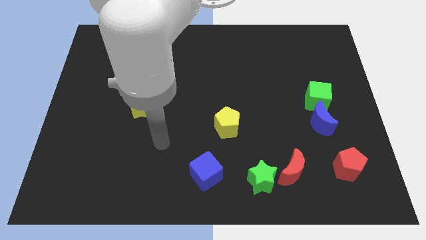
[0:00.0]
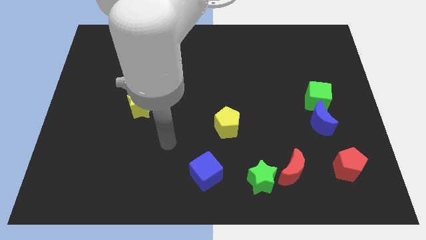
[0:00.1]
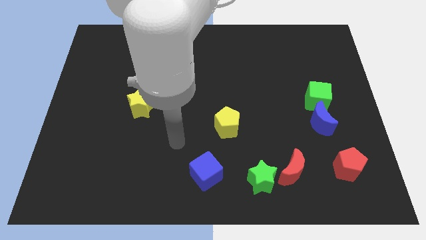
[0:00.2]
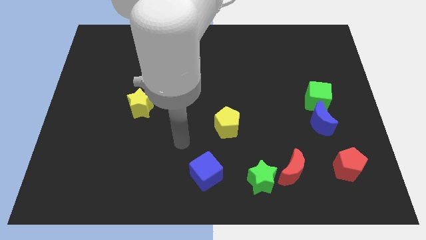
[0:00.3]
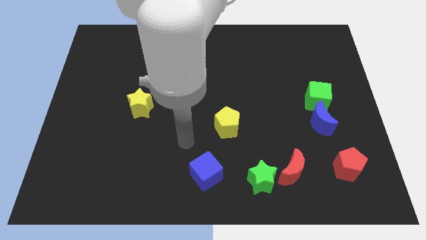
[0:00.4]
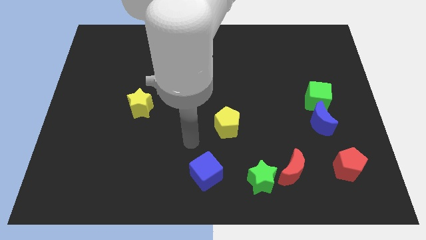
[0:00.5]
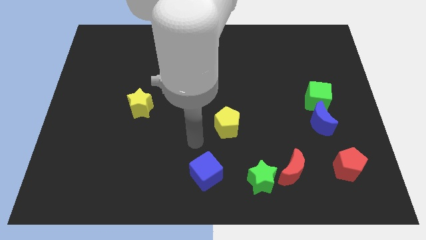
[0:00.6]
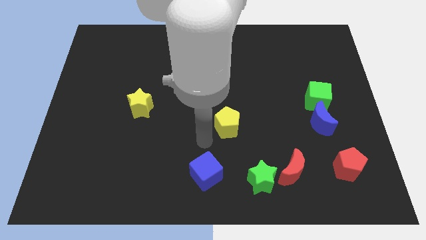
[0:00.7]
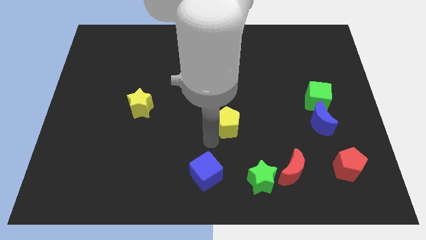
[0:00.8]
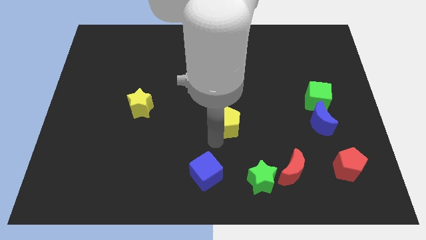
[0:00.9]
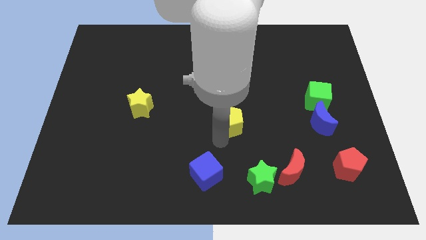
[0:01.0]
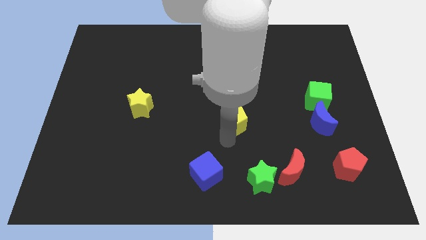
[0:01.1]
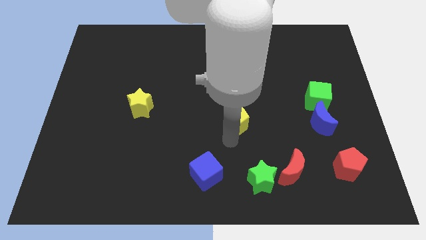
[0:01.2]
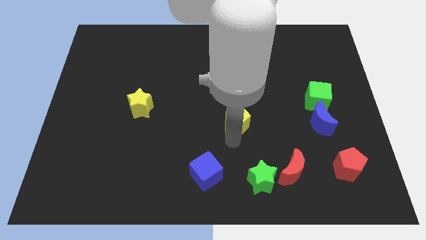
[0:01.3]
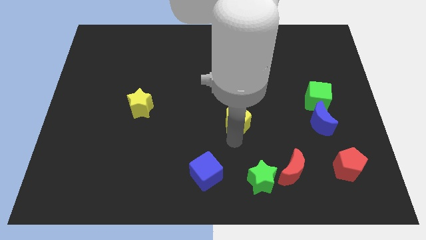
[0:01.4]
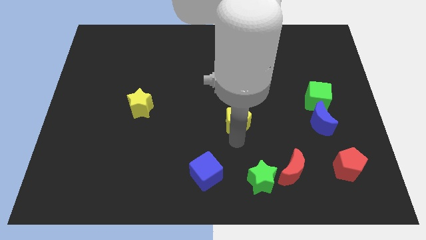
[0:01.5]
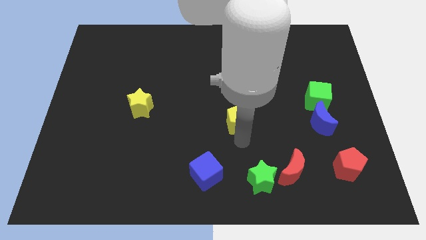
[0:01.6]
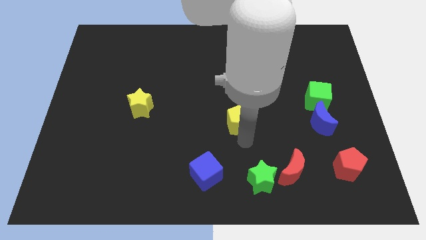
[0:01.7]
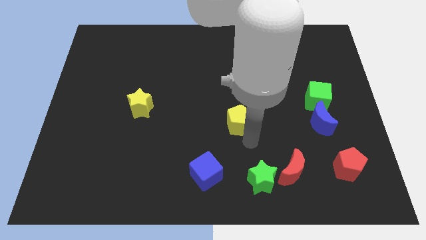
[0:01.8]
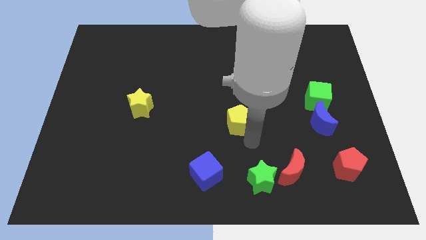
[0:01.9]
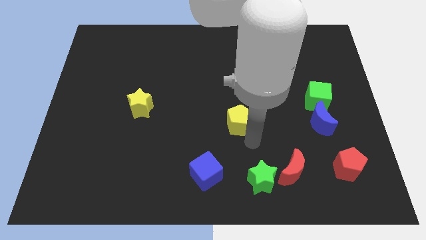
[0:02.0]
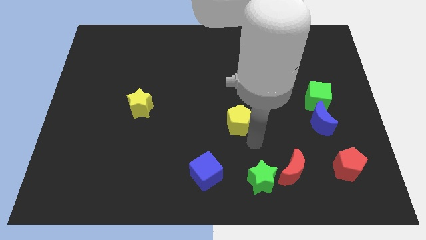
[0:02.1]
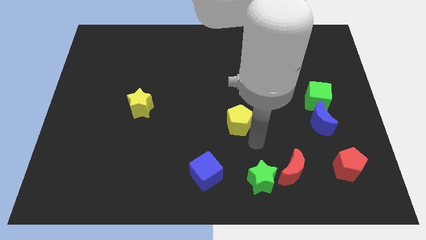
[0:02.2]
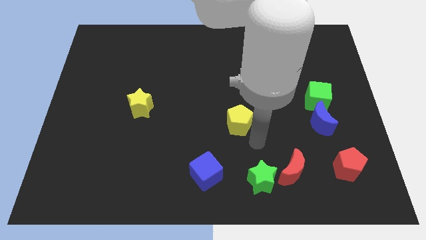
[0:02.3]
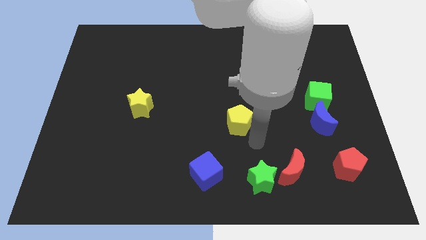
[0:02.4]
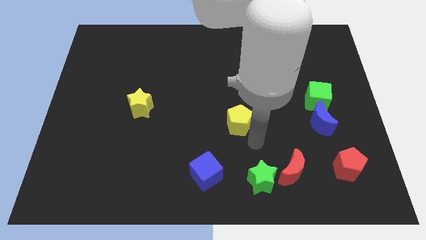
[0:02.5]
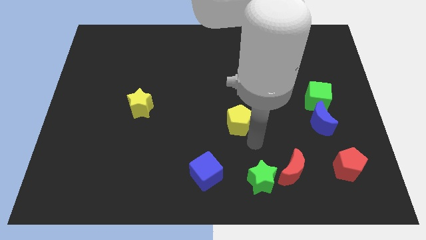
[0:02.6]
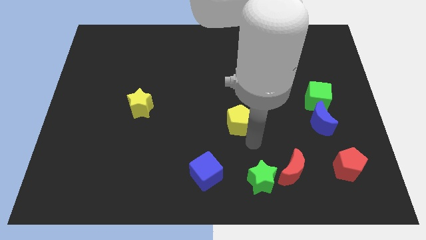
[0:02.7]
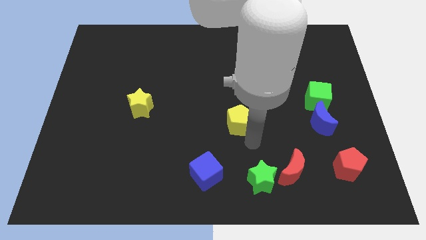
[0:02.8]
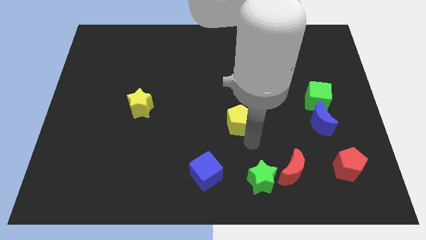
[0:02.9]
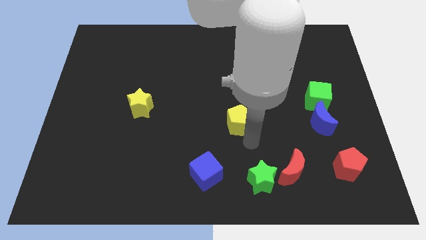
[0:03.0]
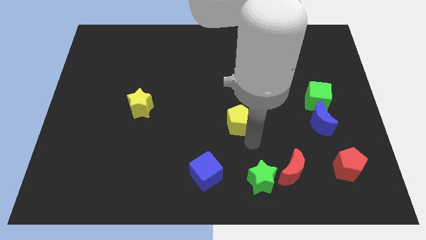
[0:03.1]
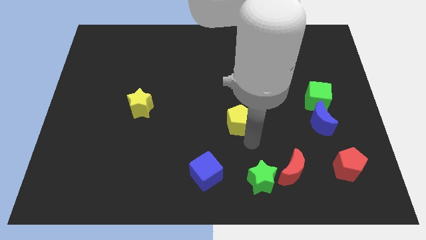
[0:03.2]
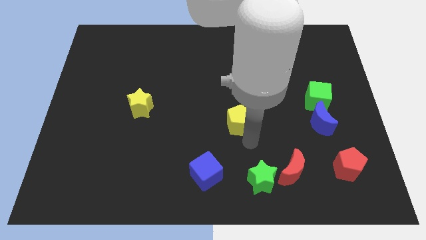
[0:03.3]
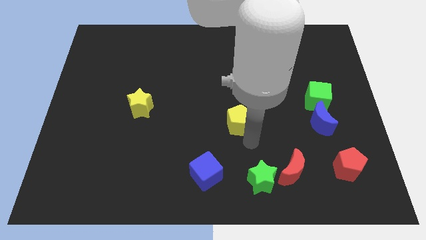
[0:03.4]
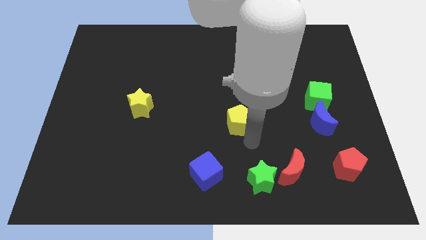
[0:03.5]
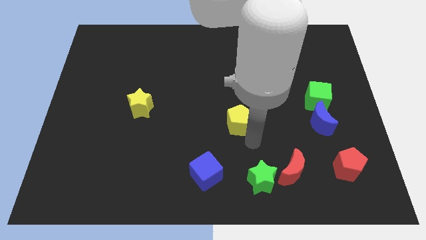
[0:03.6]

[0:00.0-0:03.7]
move the yellow pentagon to the left slightly

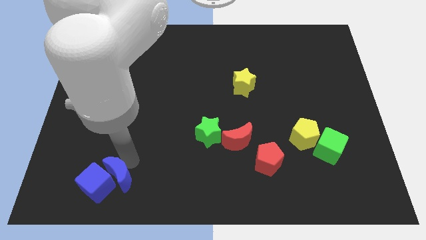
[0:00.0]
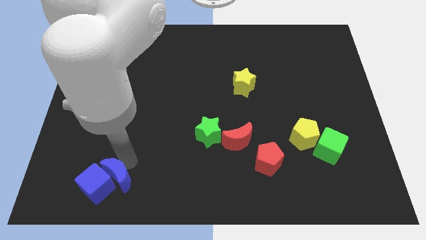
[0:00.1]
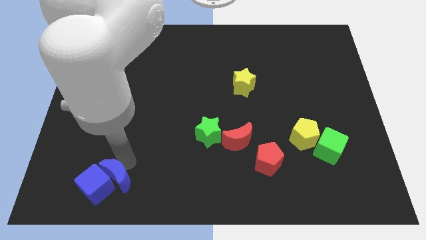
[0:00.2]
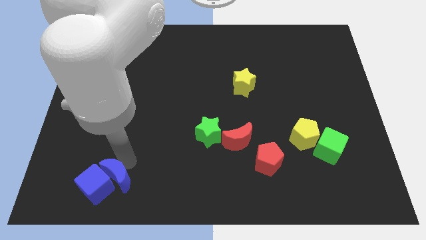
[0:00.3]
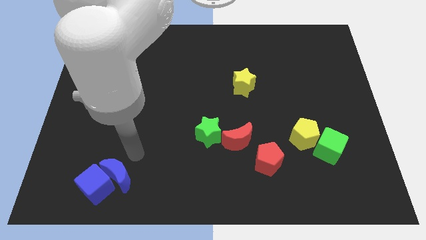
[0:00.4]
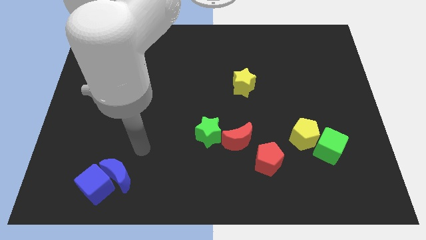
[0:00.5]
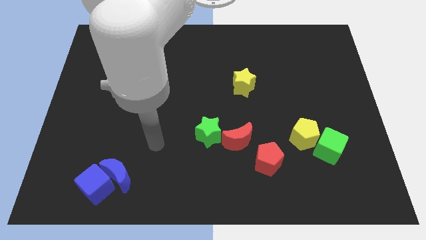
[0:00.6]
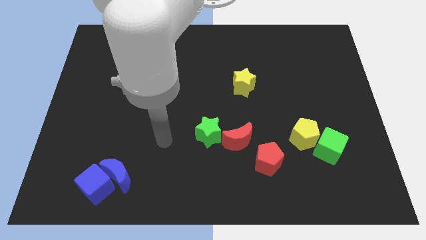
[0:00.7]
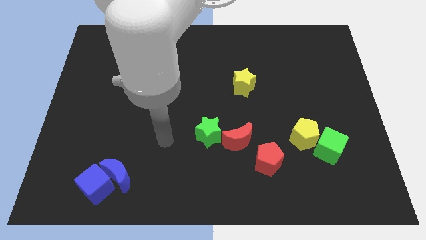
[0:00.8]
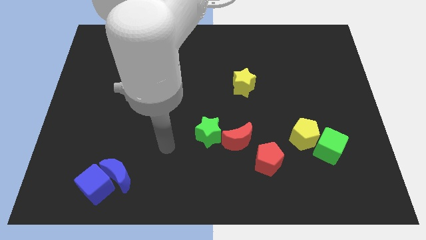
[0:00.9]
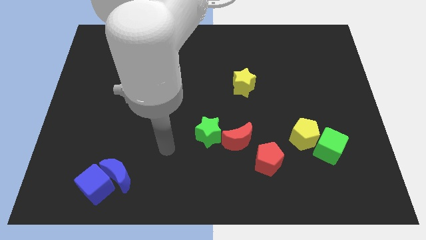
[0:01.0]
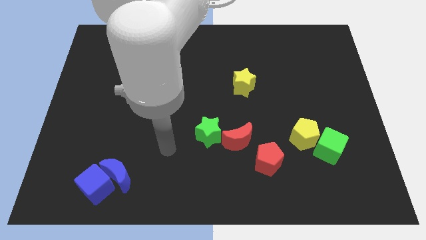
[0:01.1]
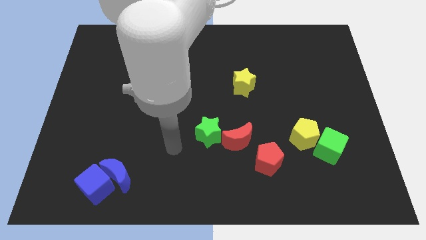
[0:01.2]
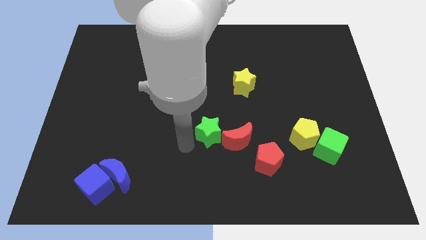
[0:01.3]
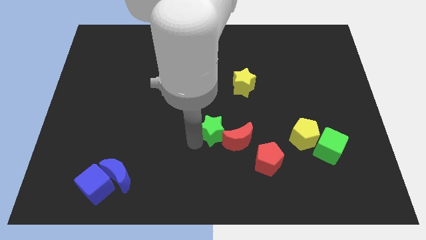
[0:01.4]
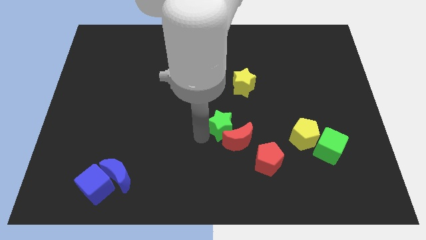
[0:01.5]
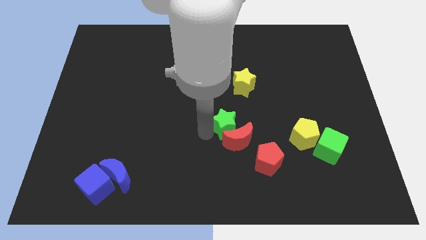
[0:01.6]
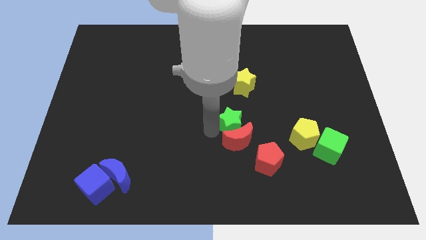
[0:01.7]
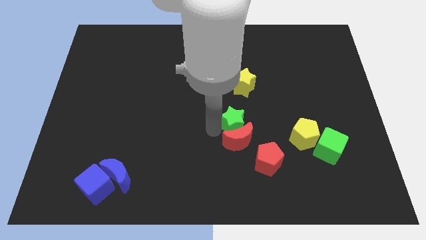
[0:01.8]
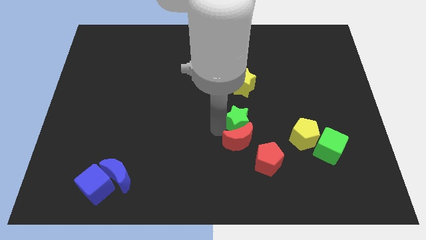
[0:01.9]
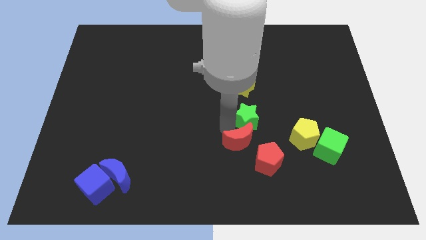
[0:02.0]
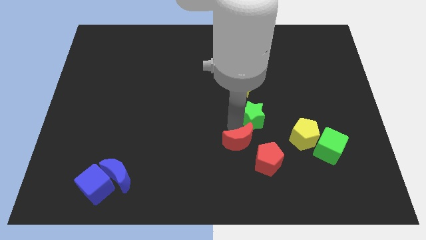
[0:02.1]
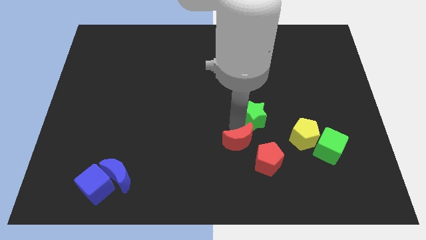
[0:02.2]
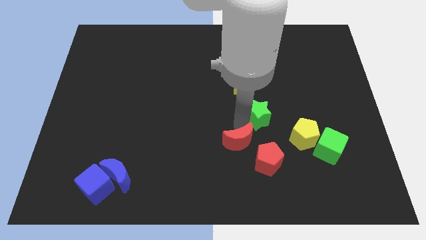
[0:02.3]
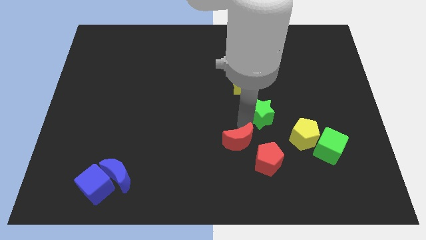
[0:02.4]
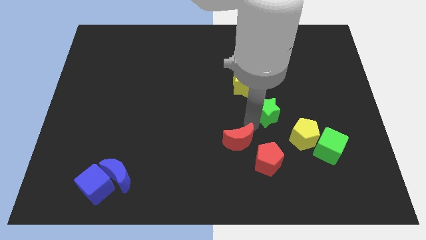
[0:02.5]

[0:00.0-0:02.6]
separate the green star from the red moon

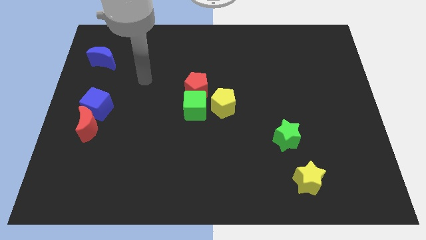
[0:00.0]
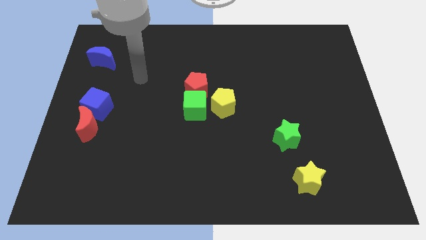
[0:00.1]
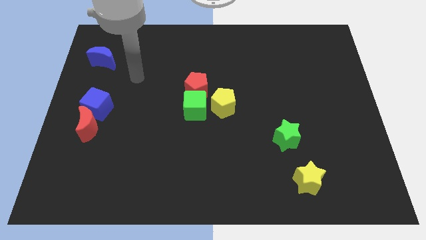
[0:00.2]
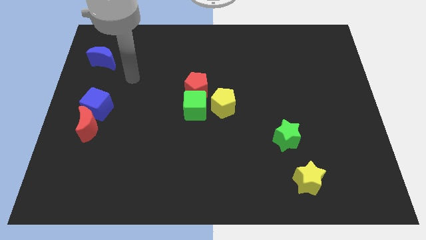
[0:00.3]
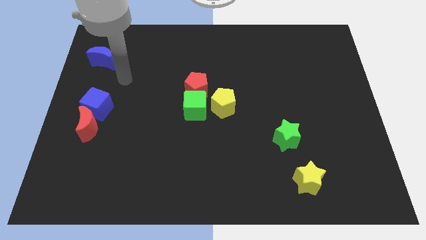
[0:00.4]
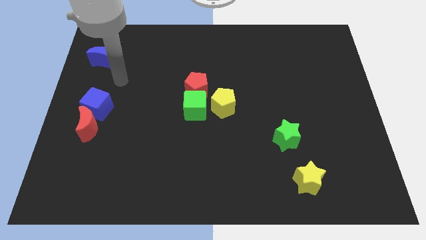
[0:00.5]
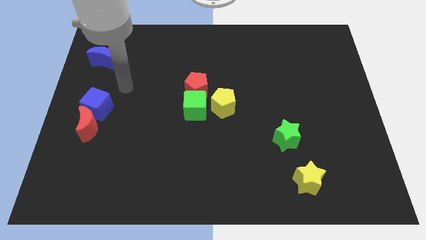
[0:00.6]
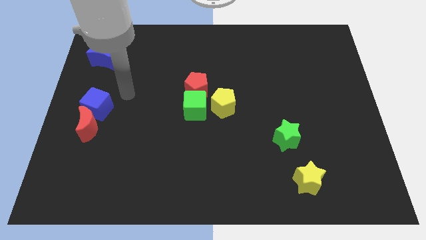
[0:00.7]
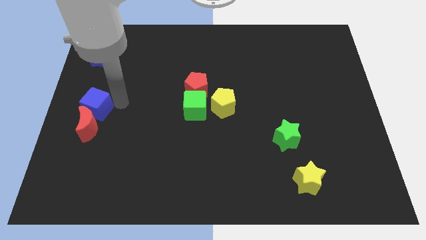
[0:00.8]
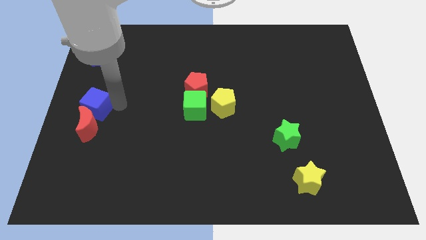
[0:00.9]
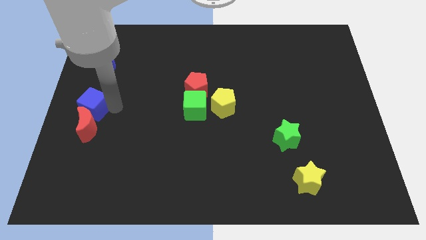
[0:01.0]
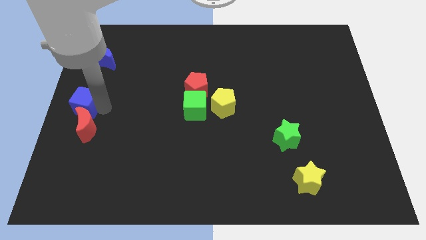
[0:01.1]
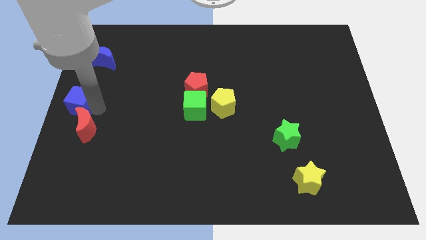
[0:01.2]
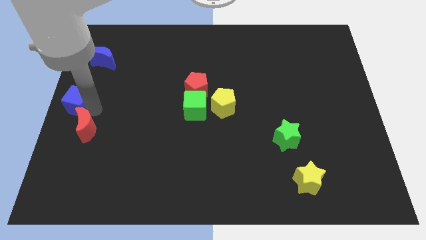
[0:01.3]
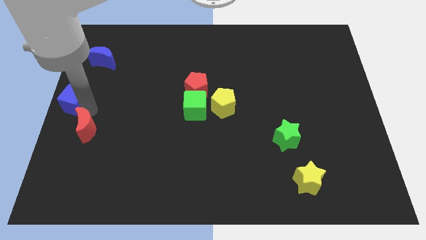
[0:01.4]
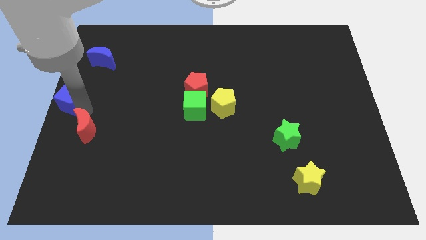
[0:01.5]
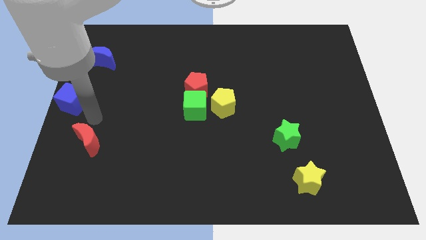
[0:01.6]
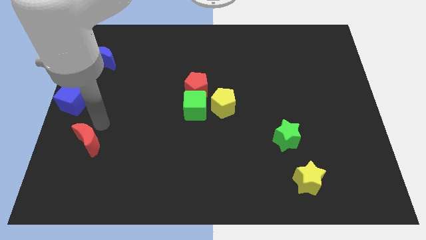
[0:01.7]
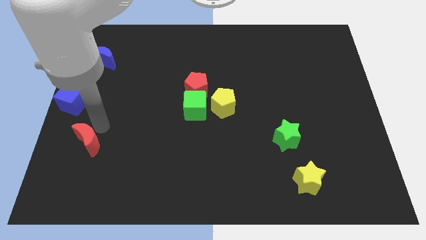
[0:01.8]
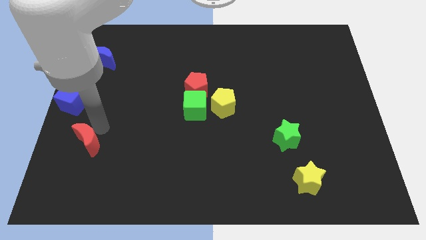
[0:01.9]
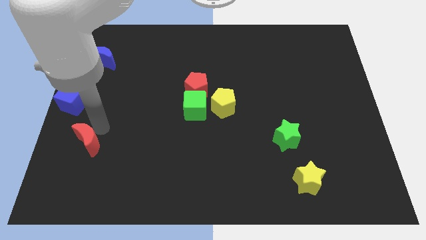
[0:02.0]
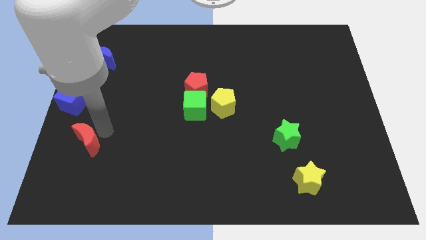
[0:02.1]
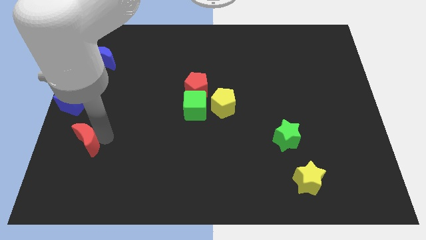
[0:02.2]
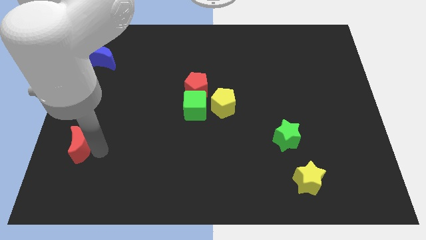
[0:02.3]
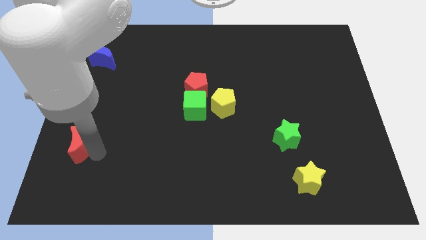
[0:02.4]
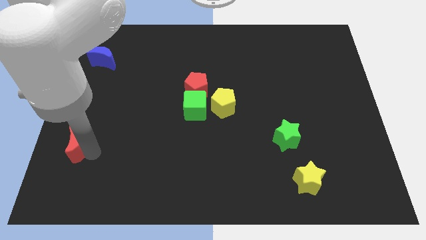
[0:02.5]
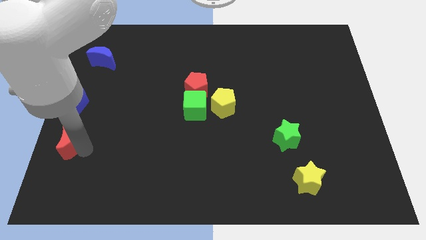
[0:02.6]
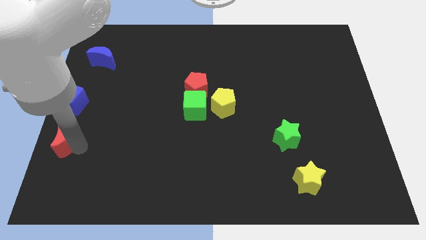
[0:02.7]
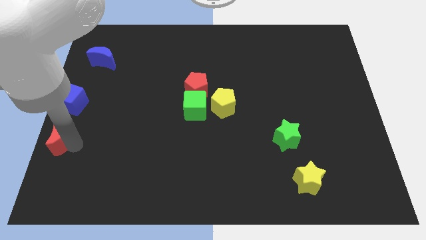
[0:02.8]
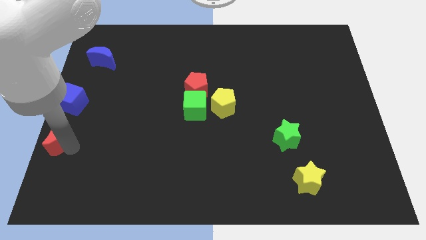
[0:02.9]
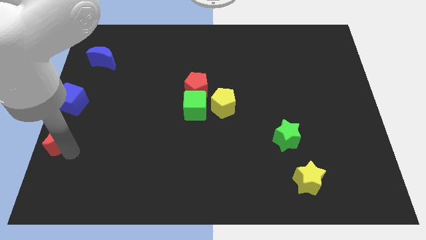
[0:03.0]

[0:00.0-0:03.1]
separate blue cube and the red crescent
